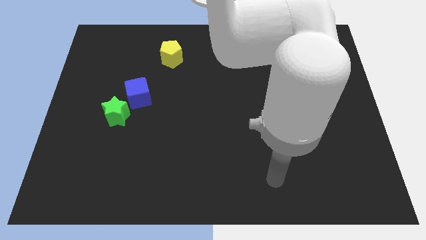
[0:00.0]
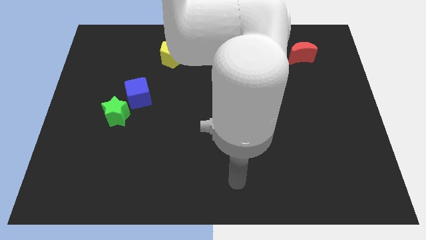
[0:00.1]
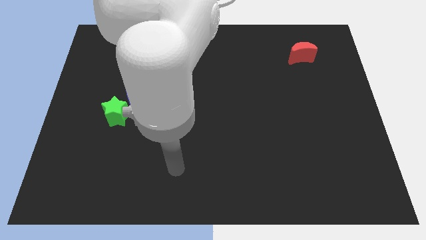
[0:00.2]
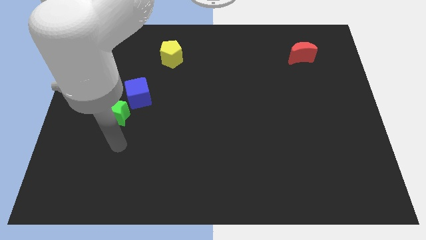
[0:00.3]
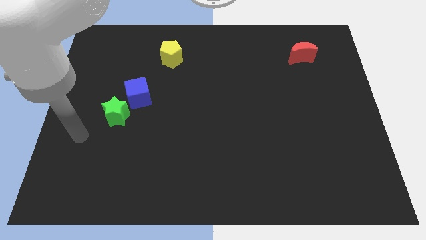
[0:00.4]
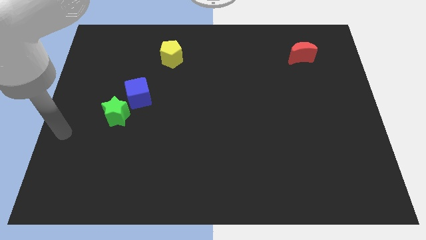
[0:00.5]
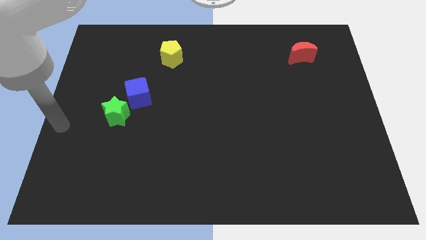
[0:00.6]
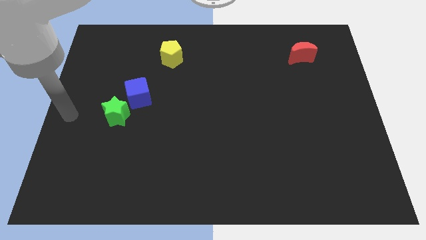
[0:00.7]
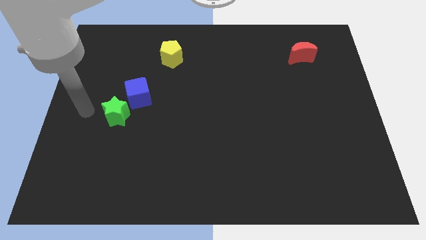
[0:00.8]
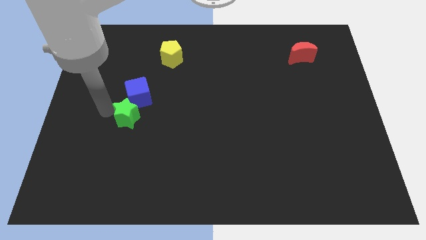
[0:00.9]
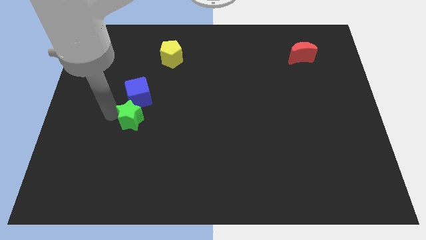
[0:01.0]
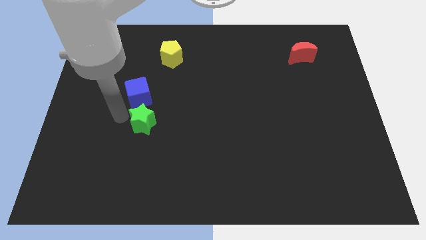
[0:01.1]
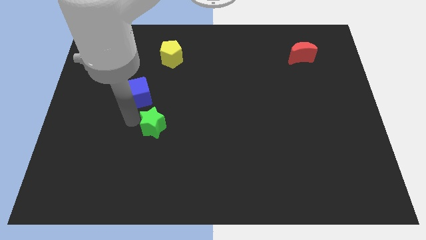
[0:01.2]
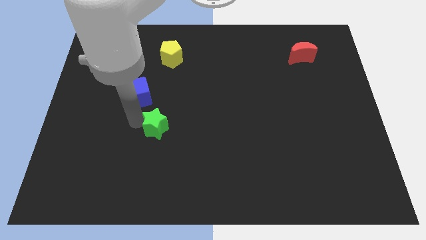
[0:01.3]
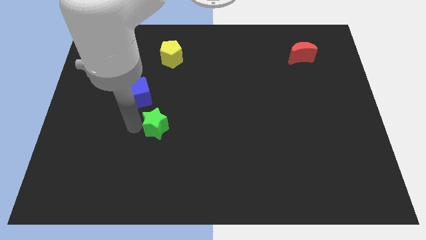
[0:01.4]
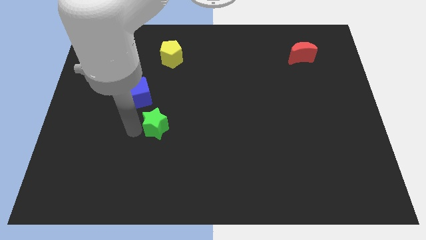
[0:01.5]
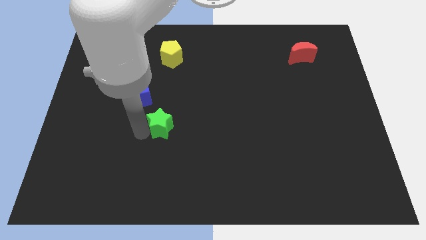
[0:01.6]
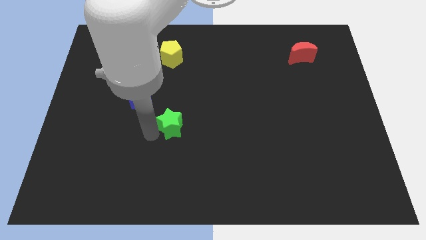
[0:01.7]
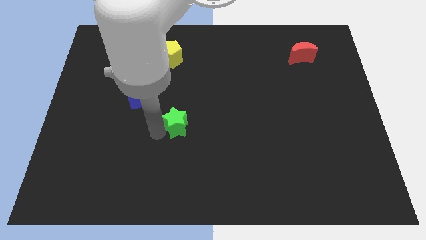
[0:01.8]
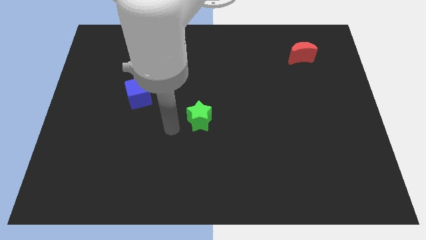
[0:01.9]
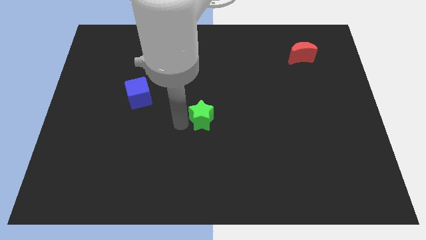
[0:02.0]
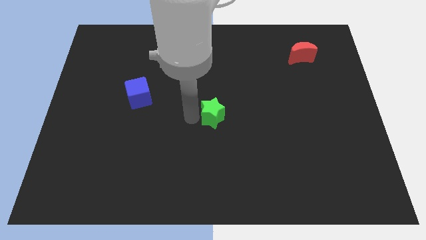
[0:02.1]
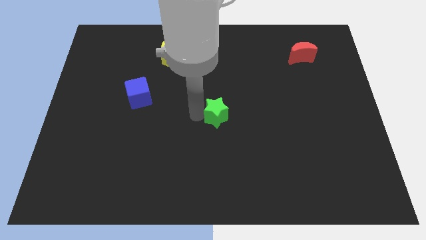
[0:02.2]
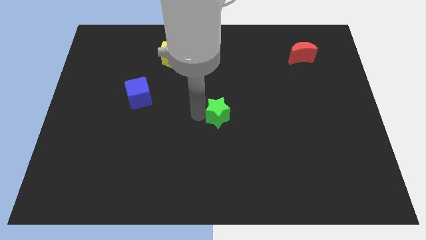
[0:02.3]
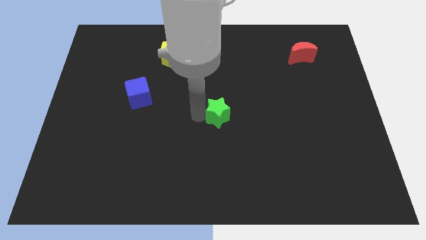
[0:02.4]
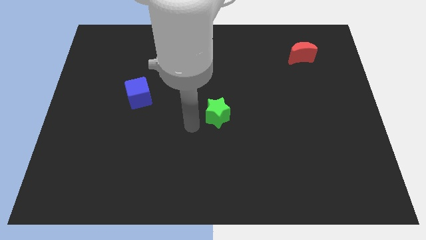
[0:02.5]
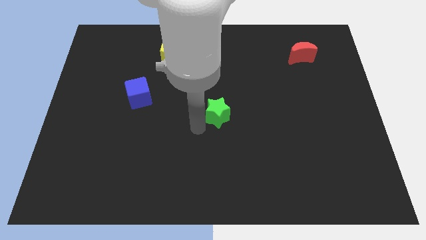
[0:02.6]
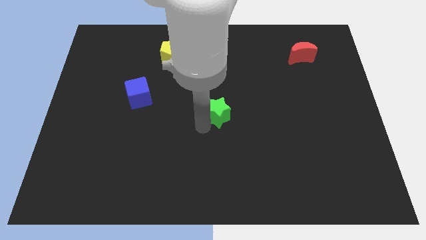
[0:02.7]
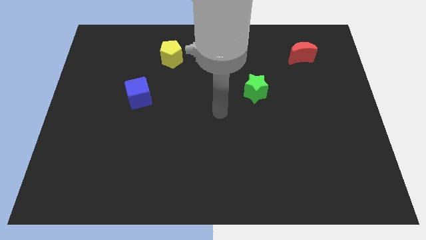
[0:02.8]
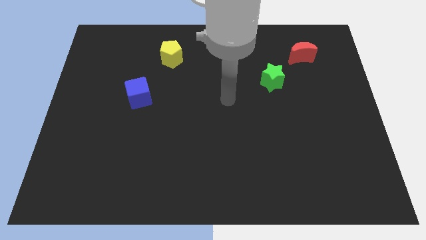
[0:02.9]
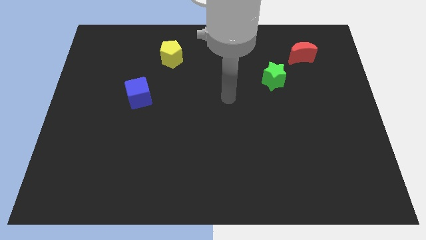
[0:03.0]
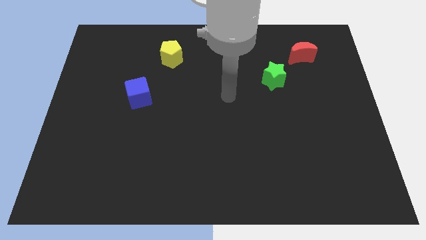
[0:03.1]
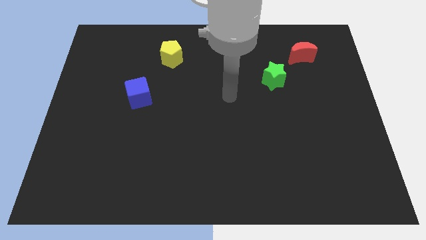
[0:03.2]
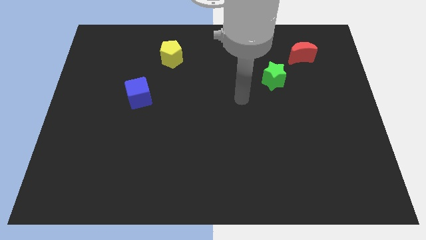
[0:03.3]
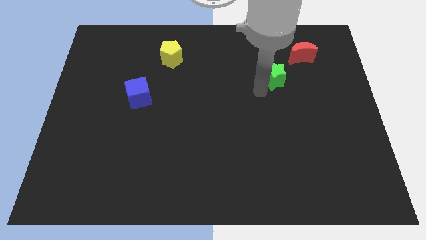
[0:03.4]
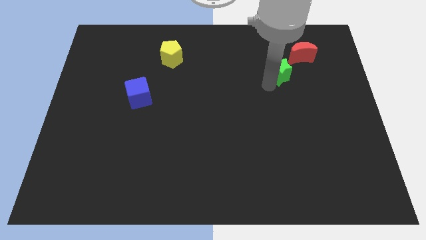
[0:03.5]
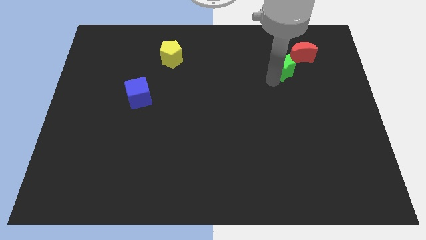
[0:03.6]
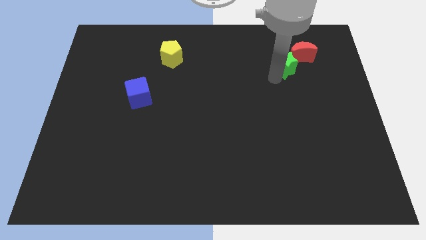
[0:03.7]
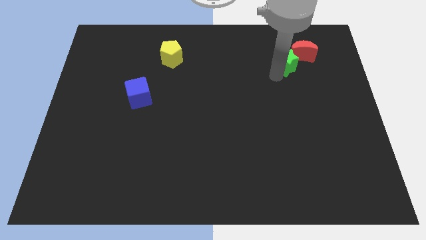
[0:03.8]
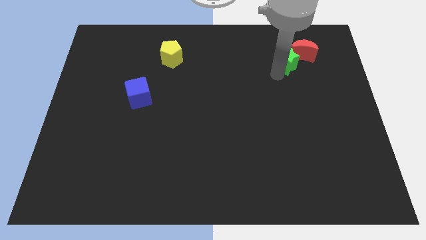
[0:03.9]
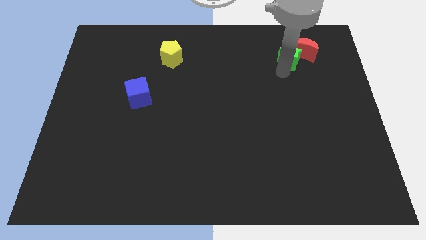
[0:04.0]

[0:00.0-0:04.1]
push the star to the red block

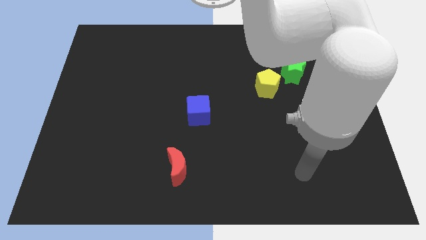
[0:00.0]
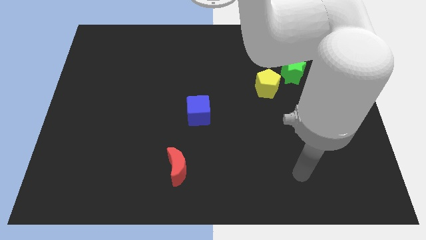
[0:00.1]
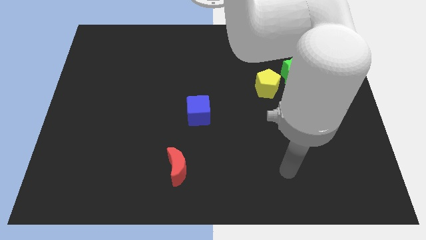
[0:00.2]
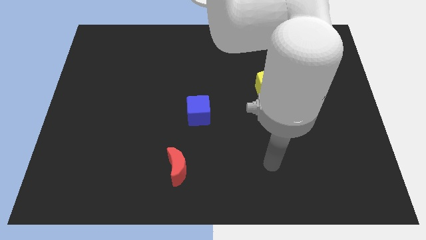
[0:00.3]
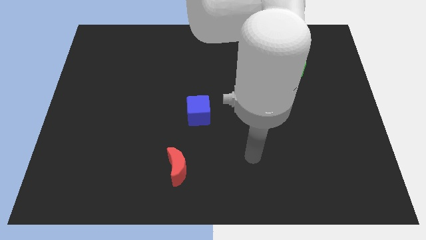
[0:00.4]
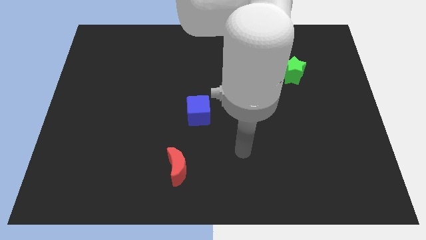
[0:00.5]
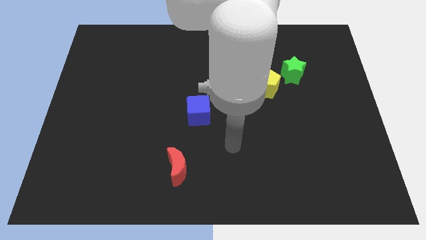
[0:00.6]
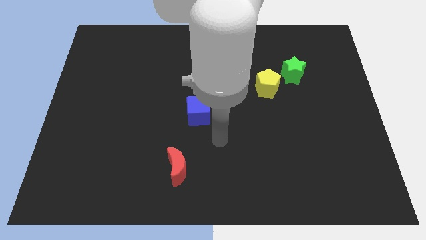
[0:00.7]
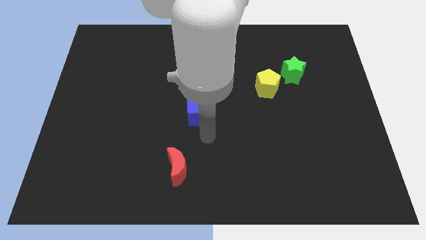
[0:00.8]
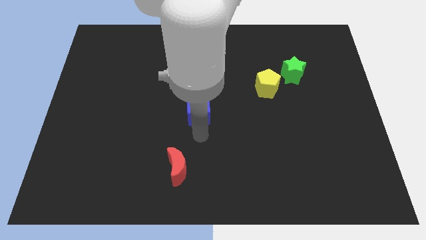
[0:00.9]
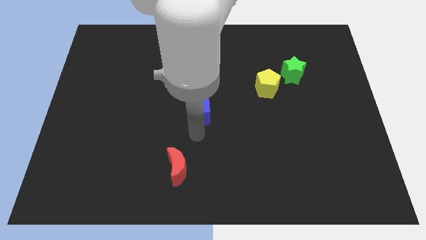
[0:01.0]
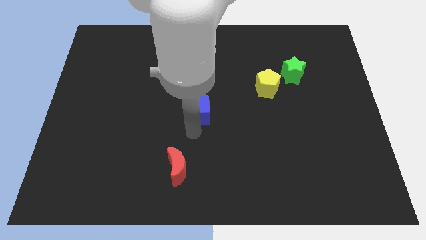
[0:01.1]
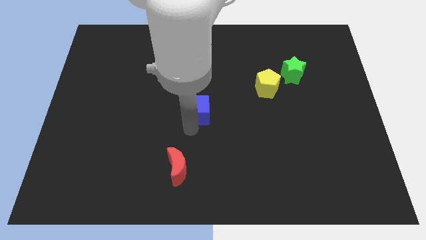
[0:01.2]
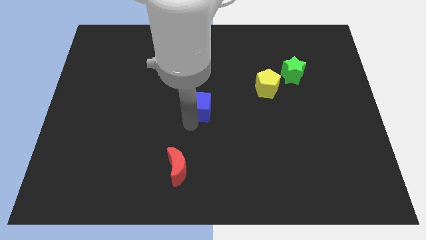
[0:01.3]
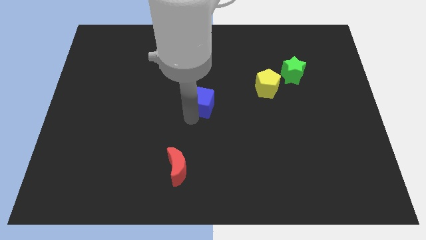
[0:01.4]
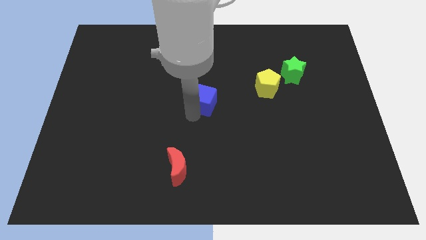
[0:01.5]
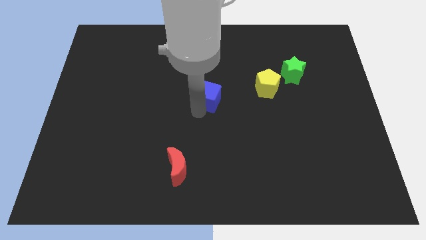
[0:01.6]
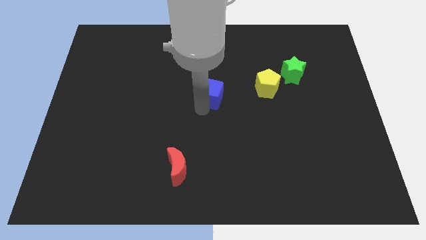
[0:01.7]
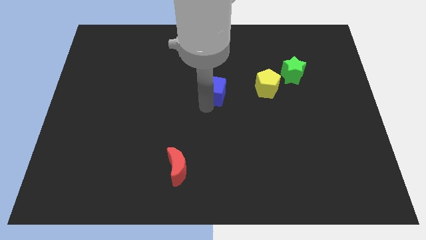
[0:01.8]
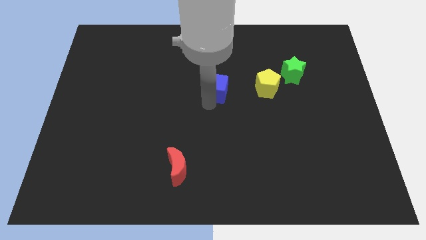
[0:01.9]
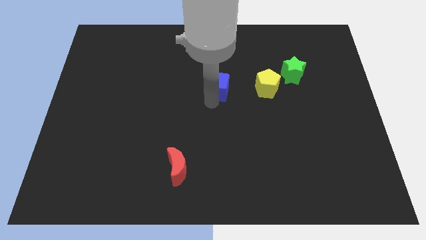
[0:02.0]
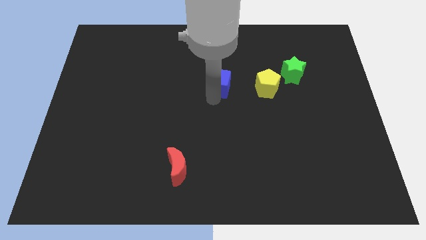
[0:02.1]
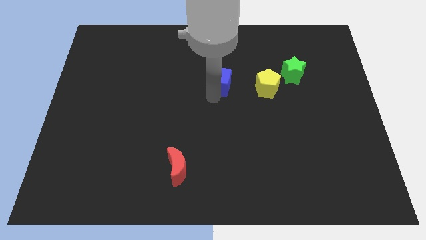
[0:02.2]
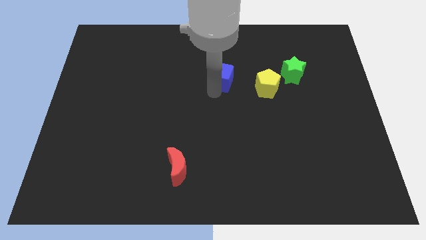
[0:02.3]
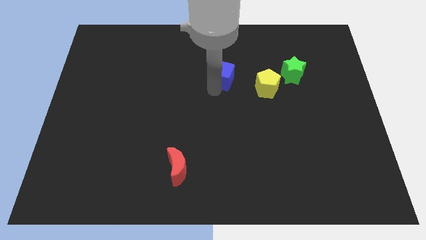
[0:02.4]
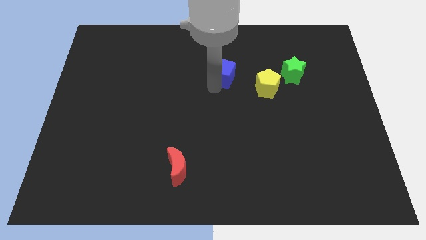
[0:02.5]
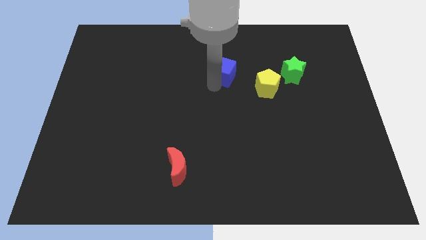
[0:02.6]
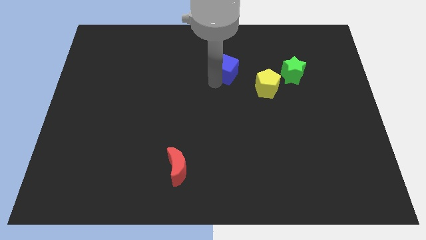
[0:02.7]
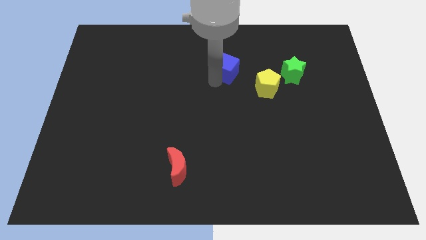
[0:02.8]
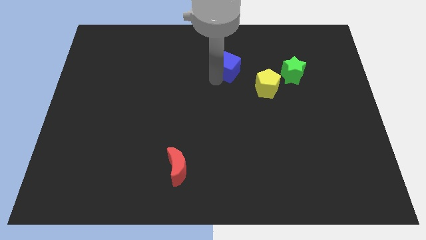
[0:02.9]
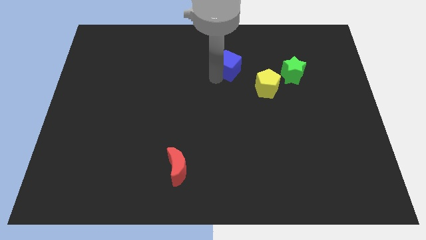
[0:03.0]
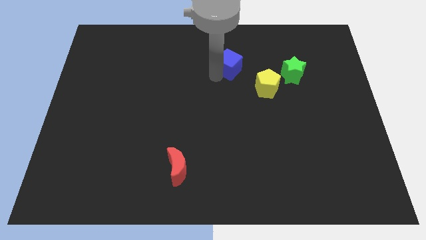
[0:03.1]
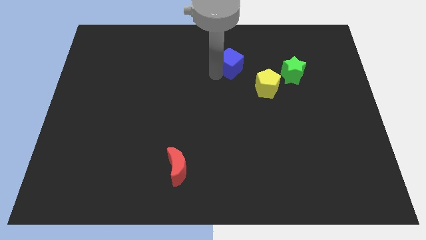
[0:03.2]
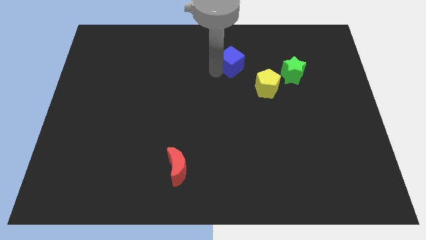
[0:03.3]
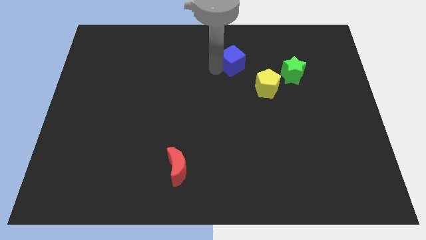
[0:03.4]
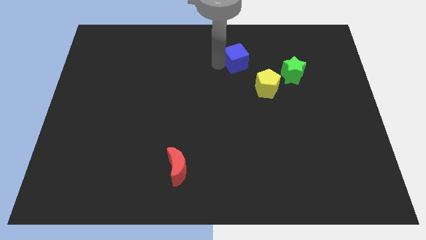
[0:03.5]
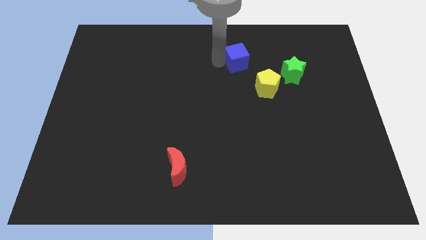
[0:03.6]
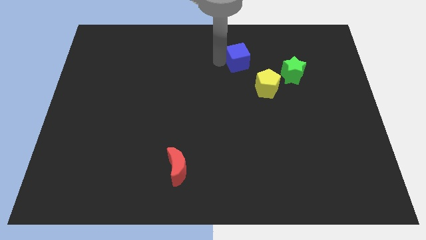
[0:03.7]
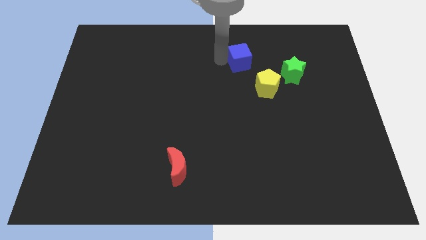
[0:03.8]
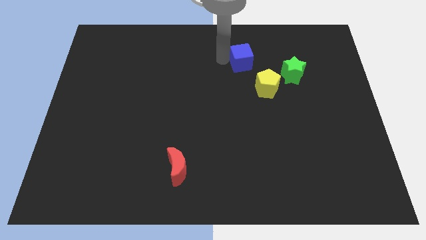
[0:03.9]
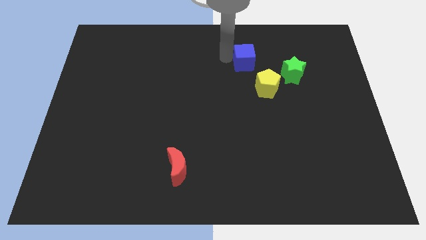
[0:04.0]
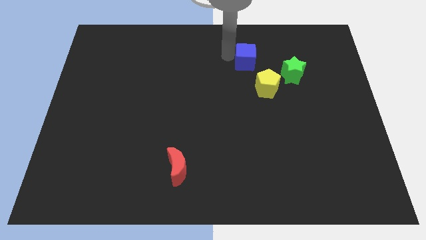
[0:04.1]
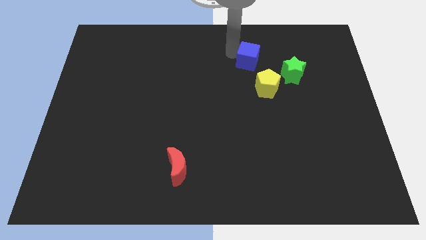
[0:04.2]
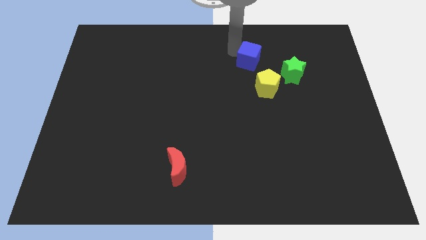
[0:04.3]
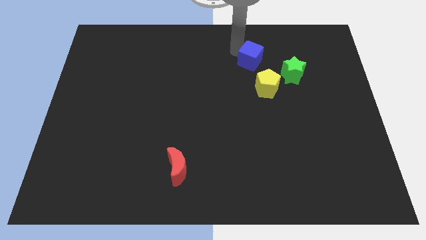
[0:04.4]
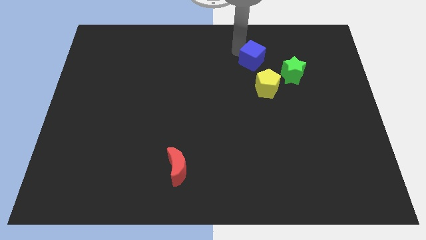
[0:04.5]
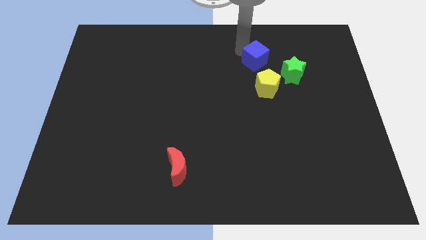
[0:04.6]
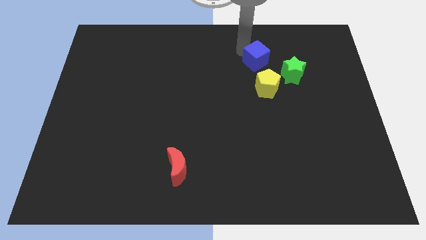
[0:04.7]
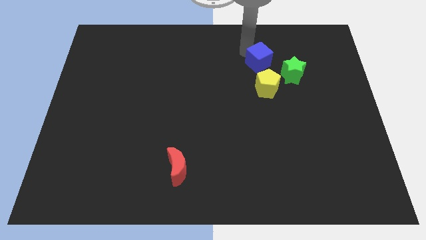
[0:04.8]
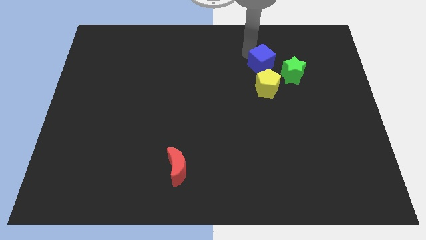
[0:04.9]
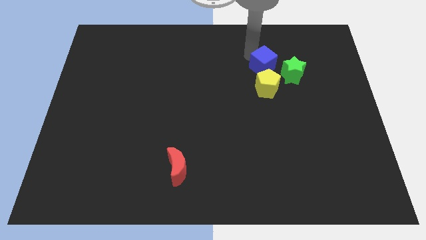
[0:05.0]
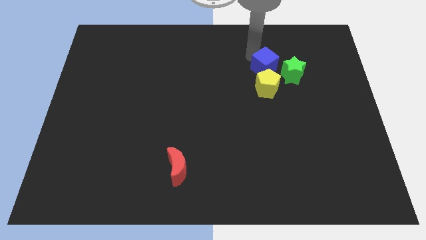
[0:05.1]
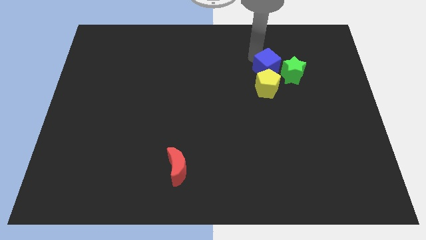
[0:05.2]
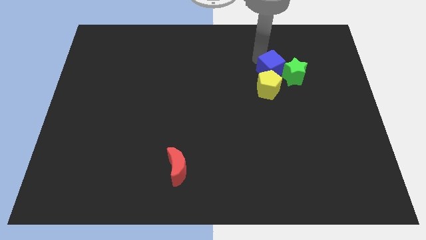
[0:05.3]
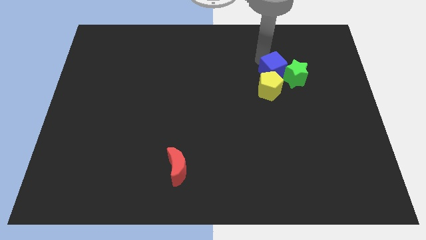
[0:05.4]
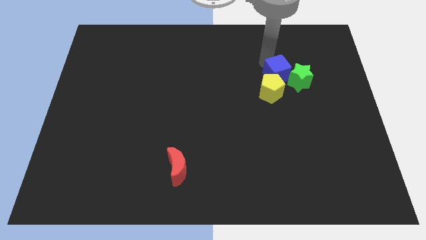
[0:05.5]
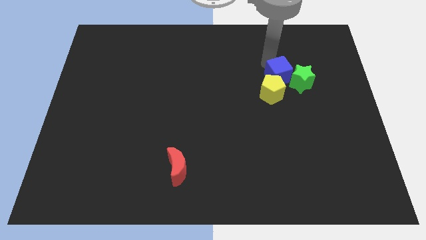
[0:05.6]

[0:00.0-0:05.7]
put the cube to the green block
